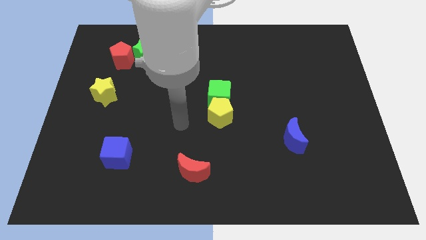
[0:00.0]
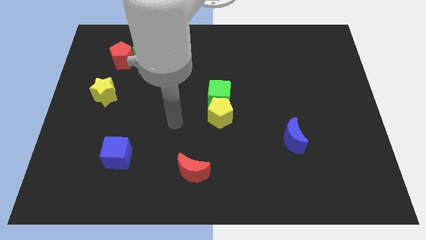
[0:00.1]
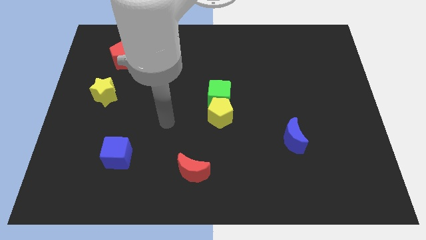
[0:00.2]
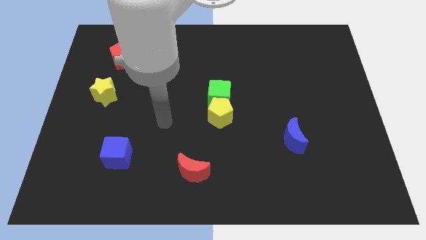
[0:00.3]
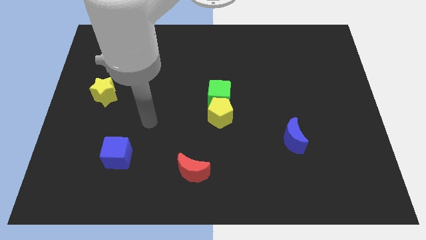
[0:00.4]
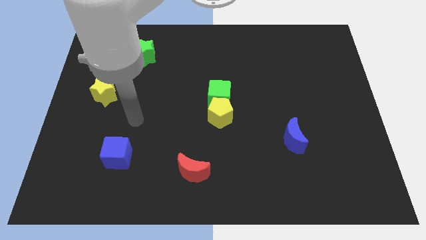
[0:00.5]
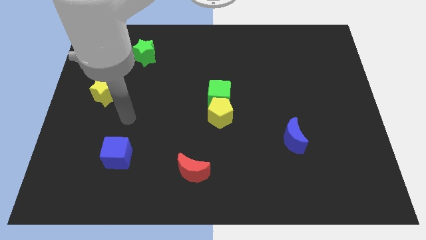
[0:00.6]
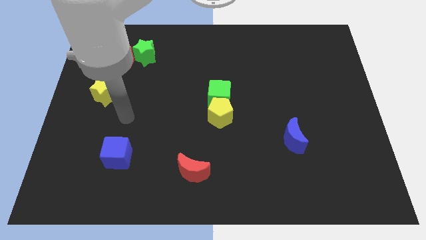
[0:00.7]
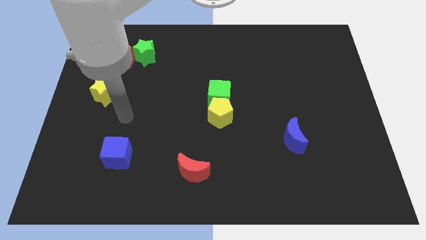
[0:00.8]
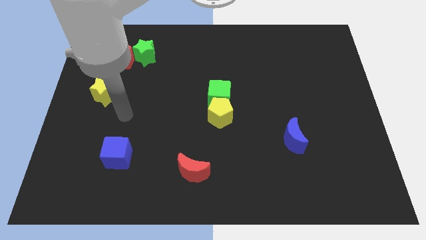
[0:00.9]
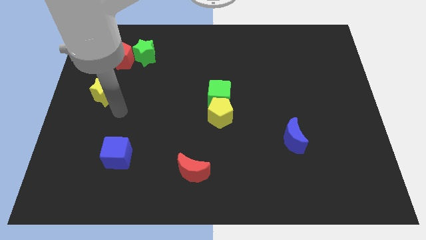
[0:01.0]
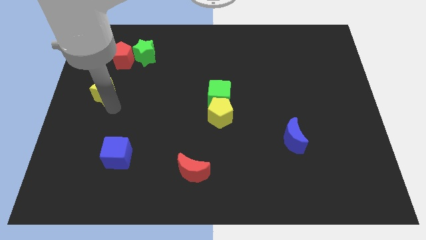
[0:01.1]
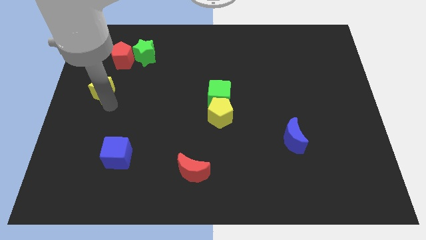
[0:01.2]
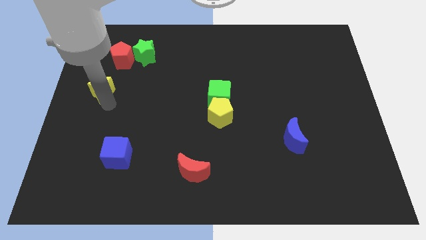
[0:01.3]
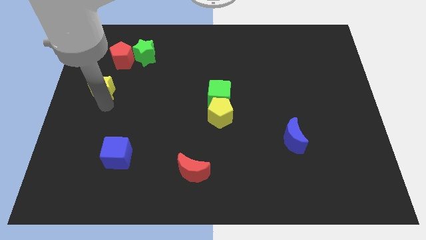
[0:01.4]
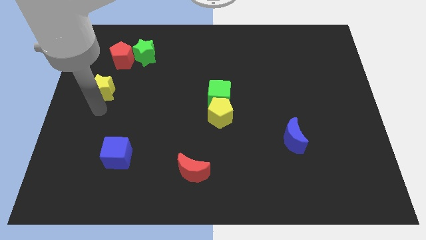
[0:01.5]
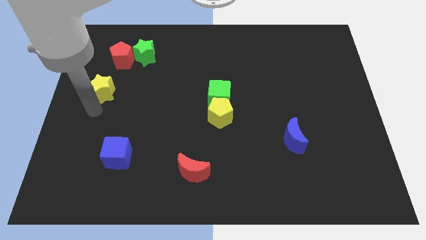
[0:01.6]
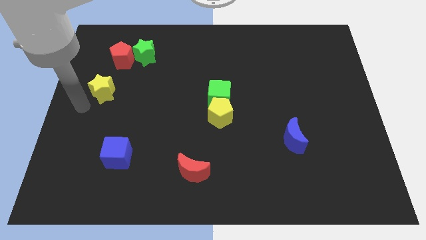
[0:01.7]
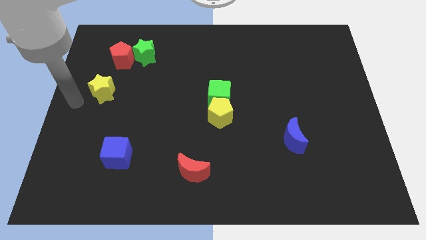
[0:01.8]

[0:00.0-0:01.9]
move the yellow star slightly up

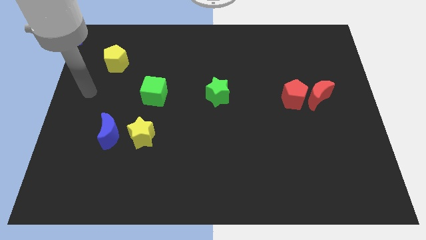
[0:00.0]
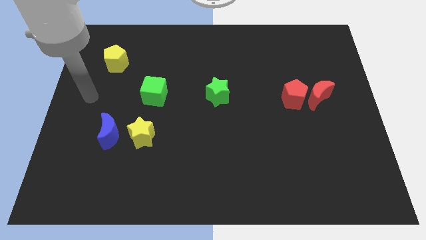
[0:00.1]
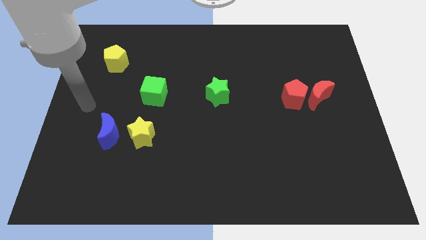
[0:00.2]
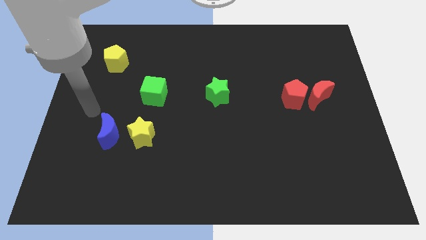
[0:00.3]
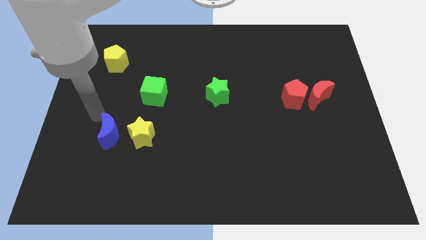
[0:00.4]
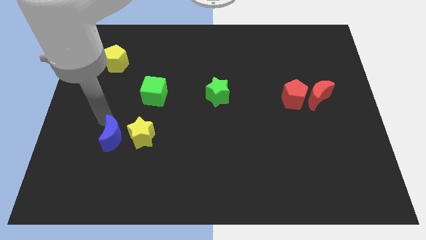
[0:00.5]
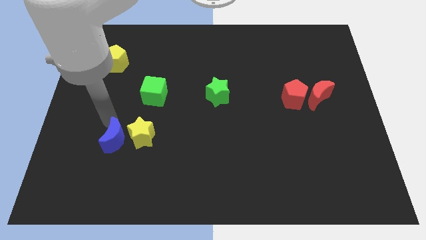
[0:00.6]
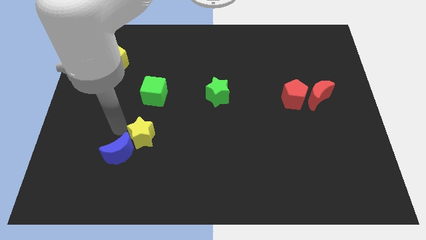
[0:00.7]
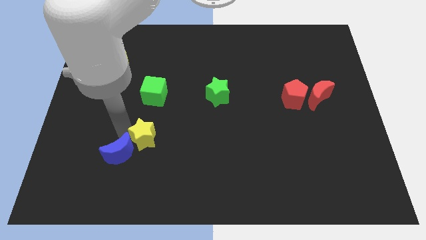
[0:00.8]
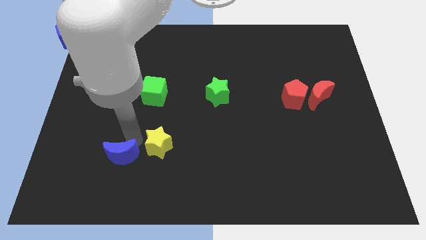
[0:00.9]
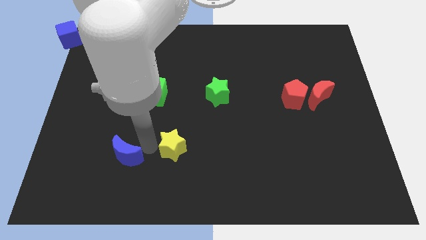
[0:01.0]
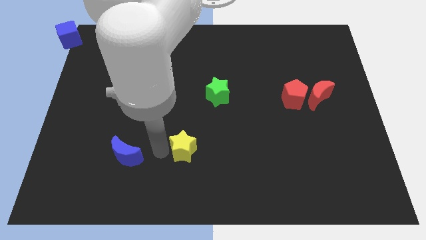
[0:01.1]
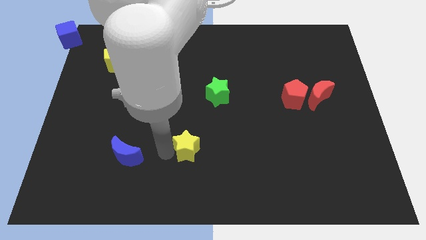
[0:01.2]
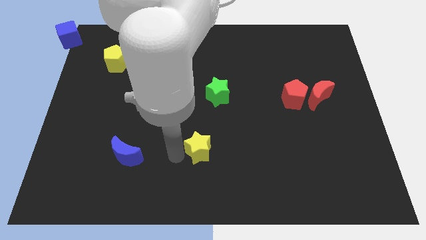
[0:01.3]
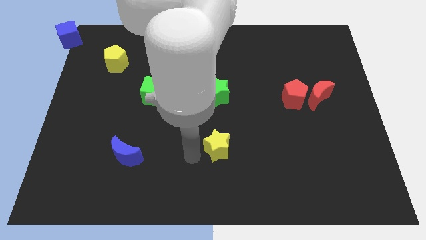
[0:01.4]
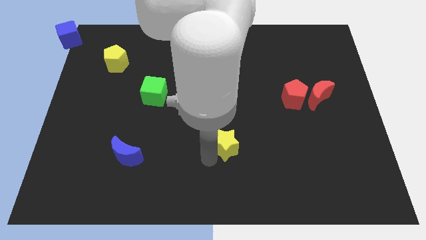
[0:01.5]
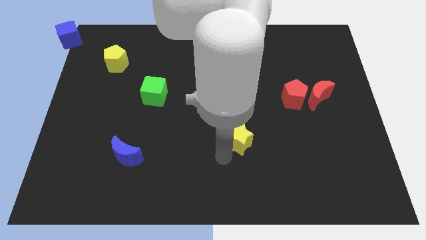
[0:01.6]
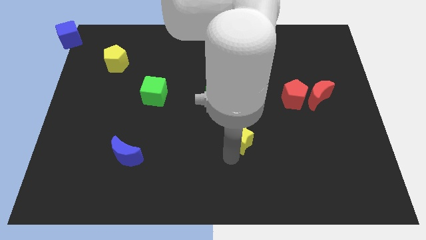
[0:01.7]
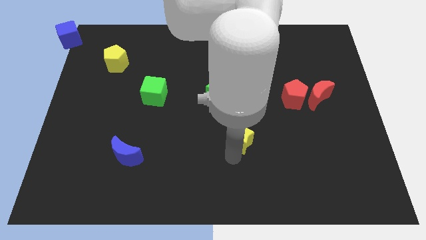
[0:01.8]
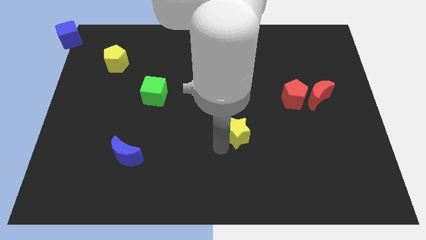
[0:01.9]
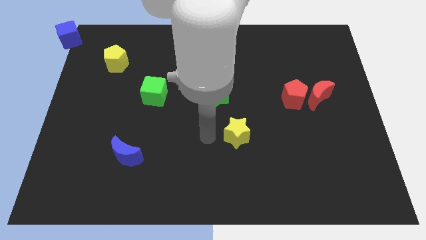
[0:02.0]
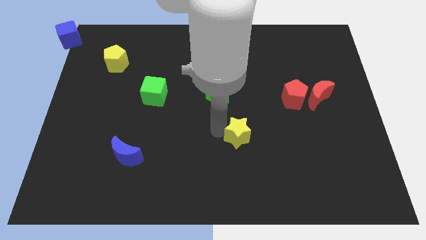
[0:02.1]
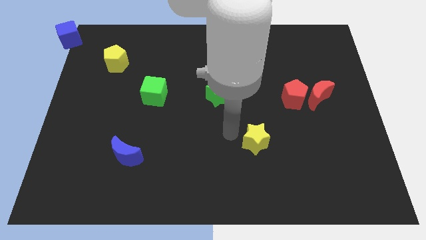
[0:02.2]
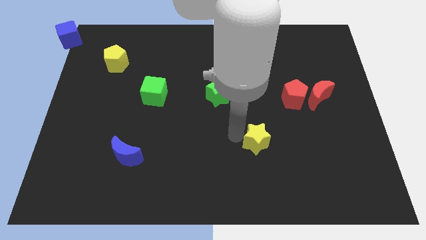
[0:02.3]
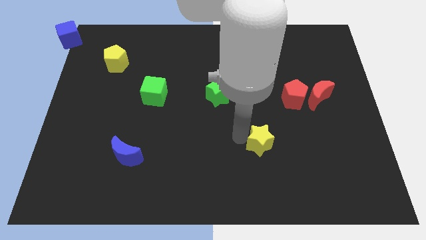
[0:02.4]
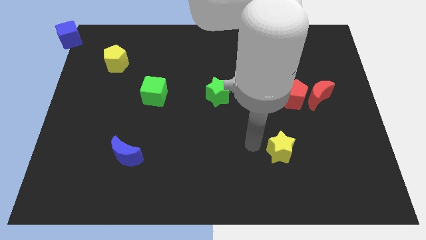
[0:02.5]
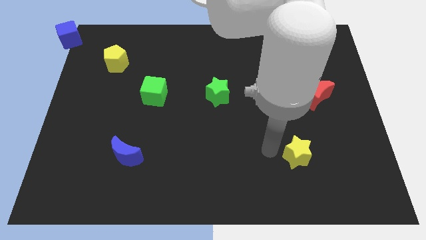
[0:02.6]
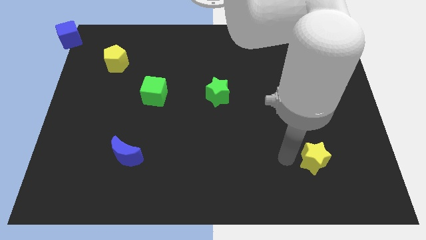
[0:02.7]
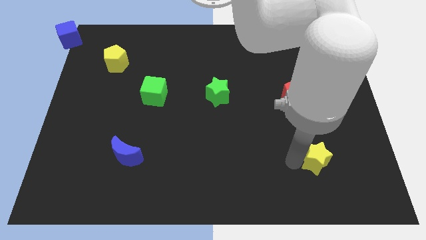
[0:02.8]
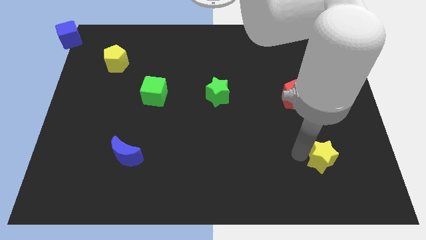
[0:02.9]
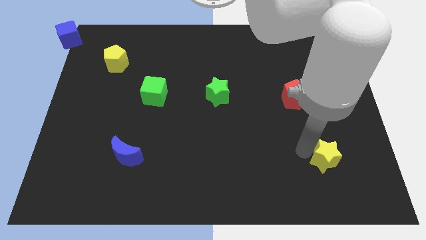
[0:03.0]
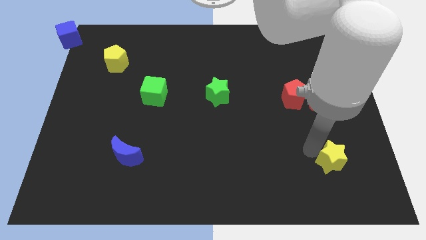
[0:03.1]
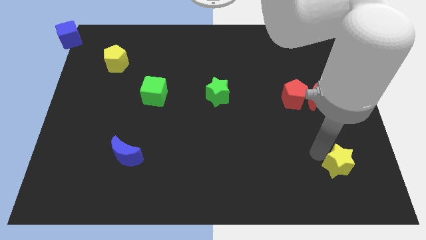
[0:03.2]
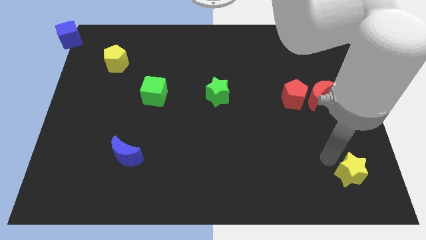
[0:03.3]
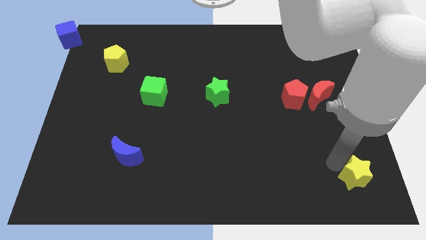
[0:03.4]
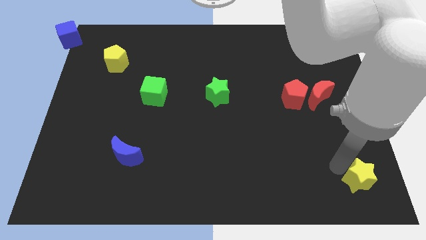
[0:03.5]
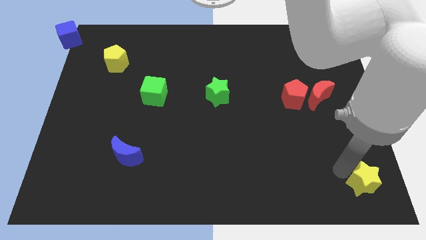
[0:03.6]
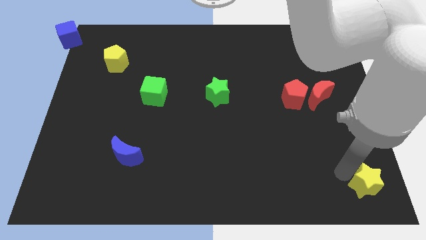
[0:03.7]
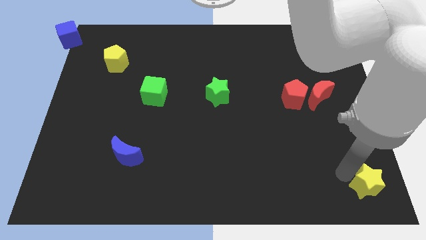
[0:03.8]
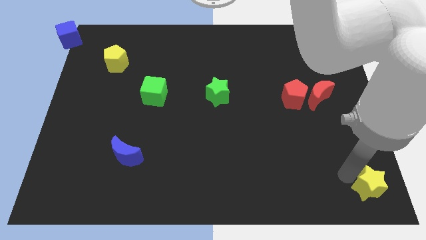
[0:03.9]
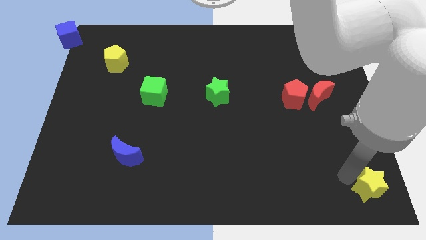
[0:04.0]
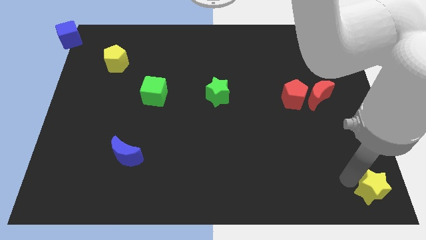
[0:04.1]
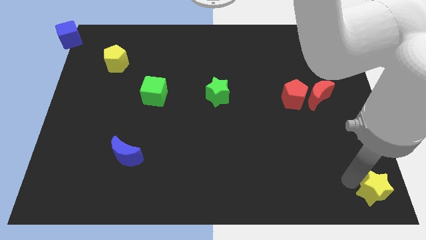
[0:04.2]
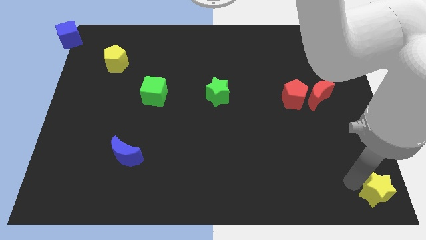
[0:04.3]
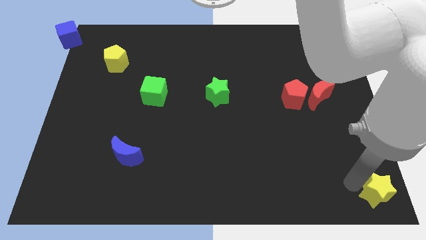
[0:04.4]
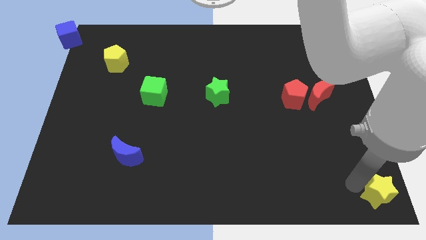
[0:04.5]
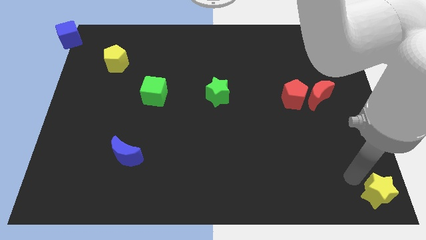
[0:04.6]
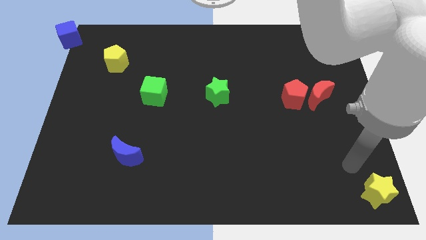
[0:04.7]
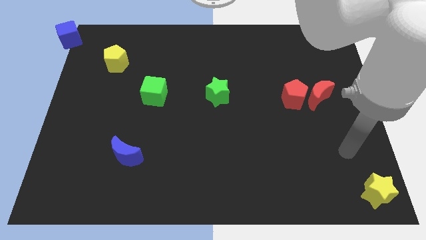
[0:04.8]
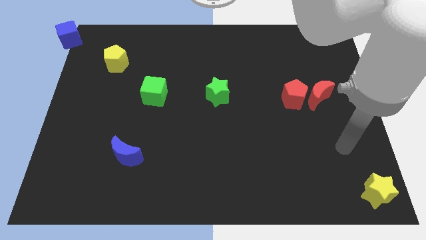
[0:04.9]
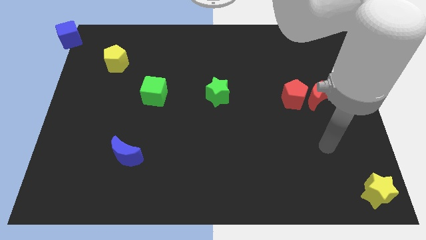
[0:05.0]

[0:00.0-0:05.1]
move yellow star bottom left of the board

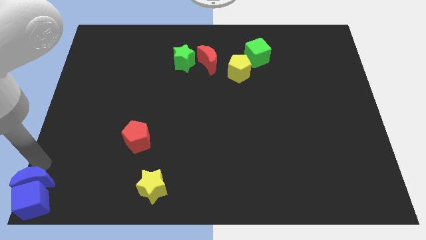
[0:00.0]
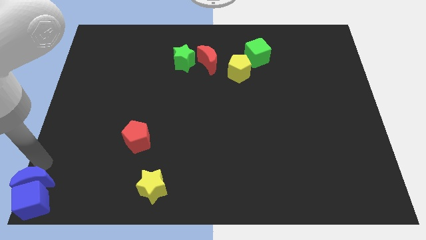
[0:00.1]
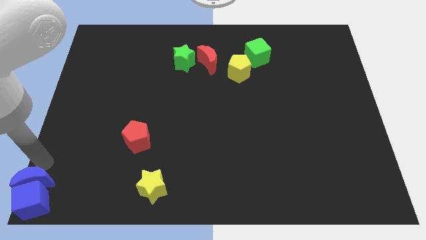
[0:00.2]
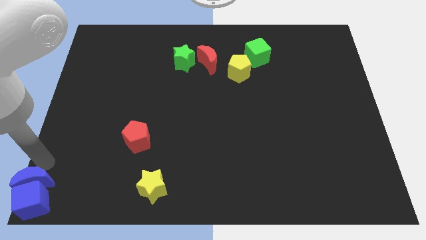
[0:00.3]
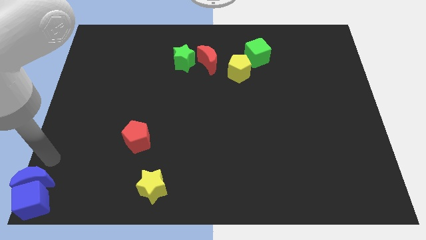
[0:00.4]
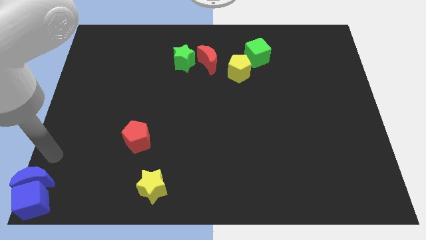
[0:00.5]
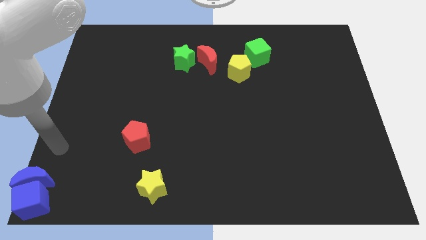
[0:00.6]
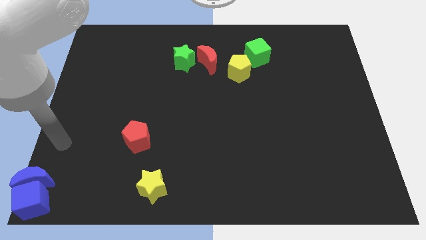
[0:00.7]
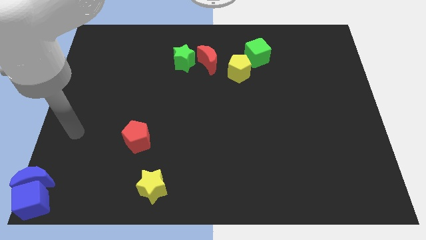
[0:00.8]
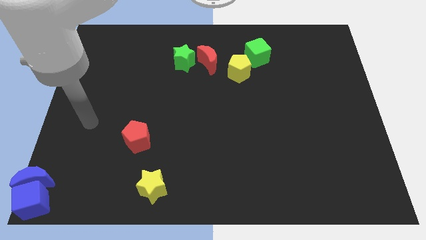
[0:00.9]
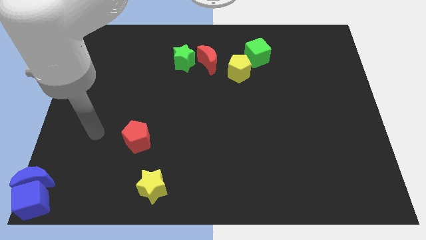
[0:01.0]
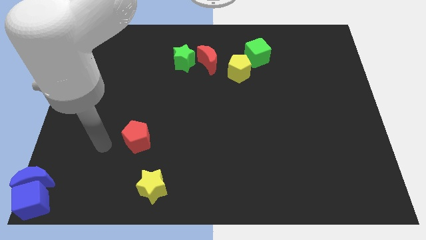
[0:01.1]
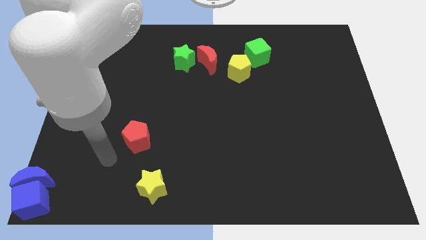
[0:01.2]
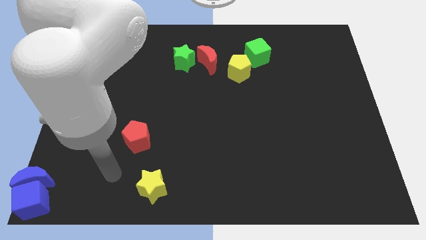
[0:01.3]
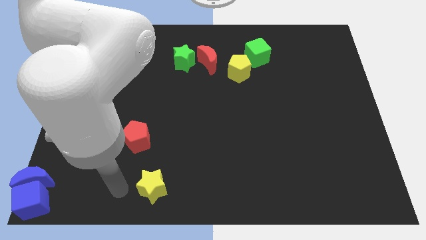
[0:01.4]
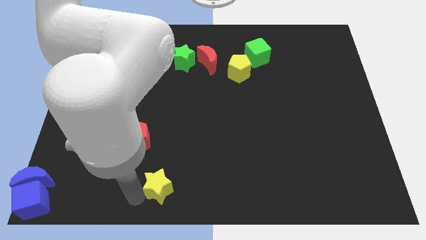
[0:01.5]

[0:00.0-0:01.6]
move your arm towards the yellow star

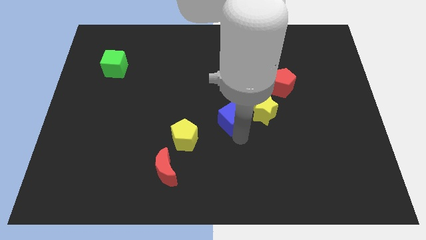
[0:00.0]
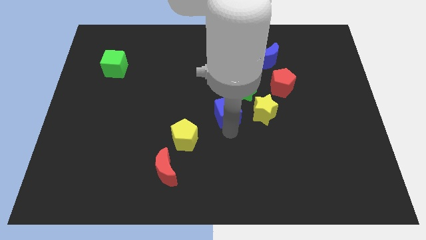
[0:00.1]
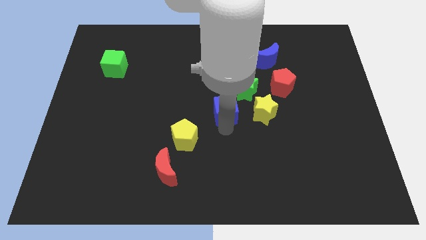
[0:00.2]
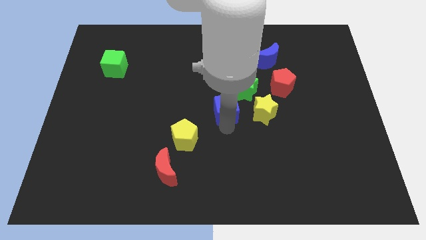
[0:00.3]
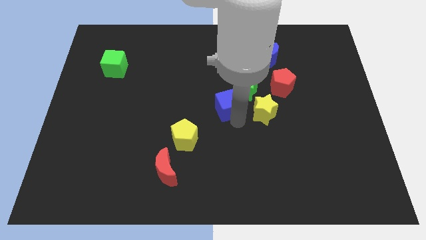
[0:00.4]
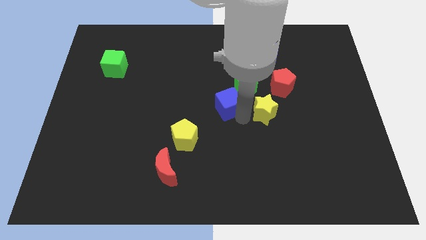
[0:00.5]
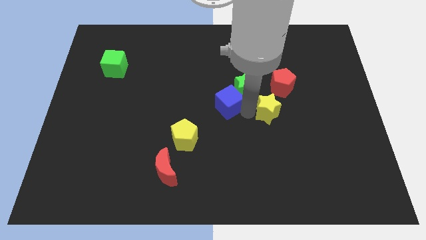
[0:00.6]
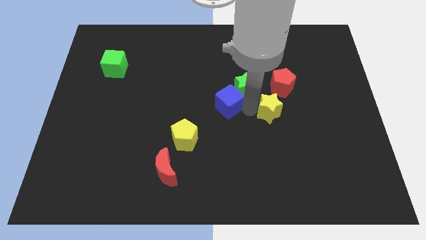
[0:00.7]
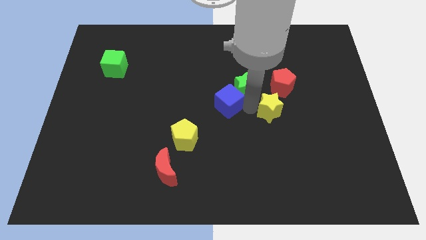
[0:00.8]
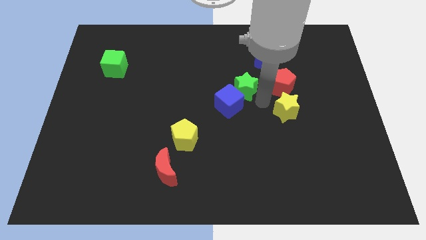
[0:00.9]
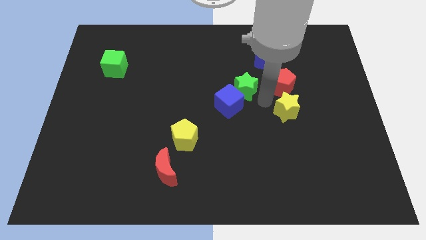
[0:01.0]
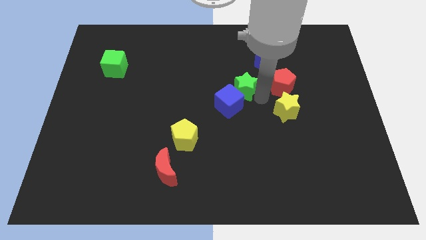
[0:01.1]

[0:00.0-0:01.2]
push the yellow star at the bottom of the red pentagon
